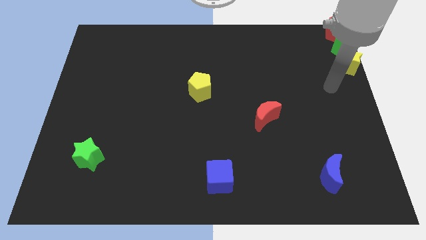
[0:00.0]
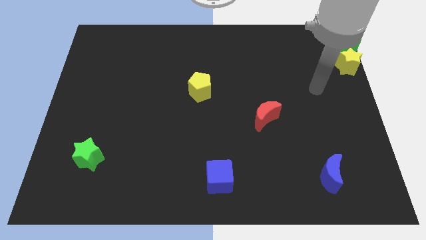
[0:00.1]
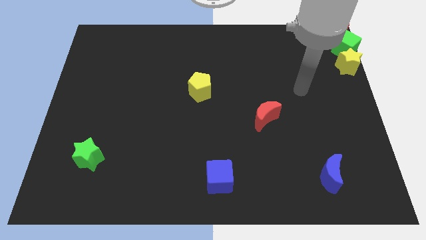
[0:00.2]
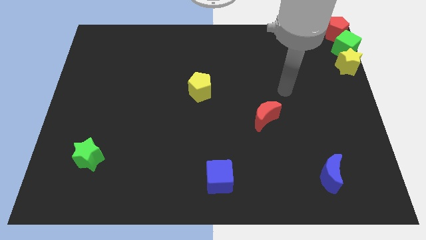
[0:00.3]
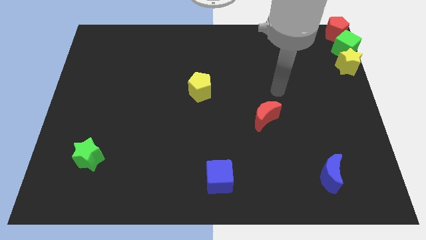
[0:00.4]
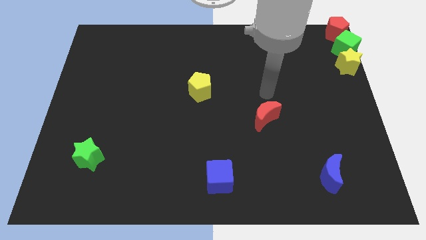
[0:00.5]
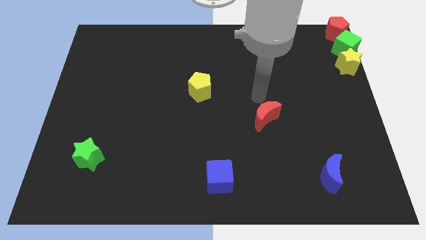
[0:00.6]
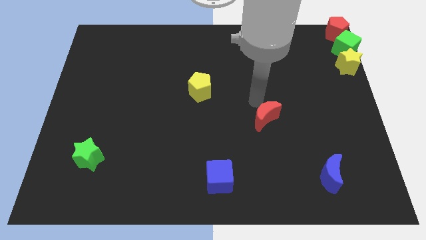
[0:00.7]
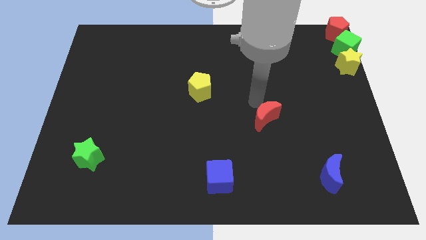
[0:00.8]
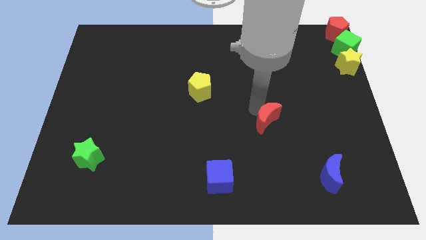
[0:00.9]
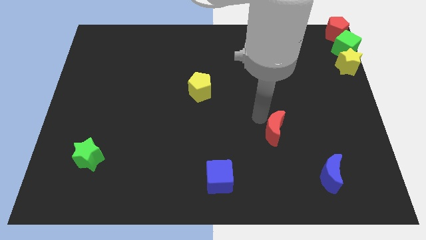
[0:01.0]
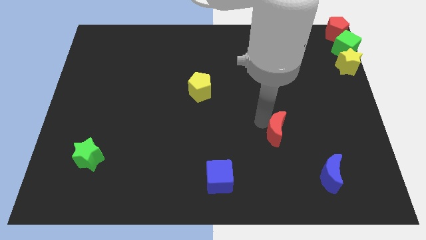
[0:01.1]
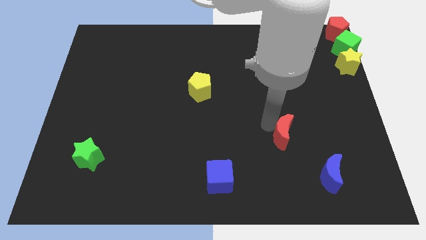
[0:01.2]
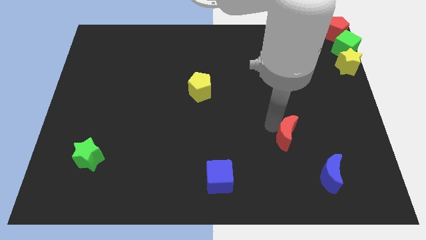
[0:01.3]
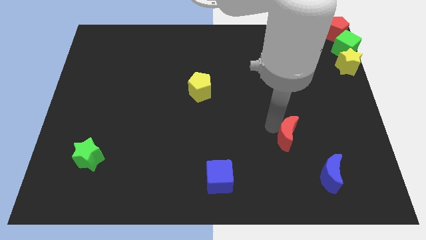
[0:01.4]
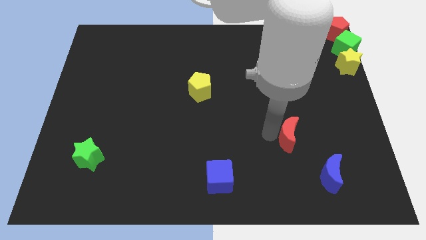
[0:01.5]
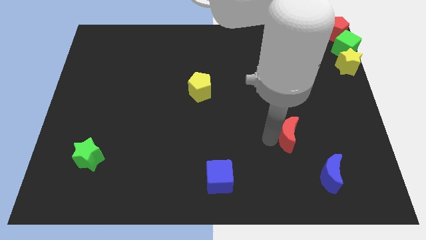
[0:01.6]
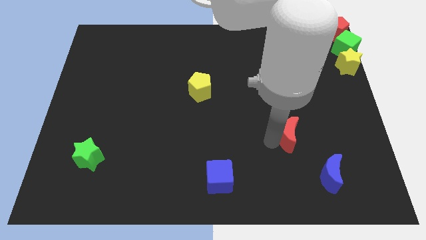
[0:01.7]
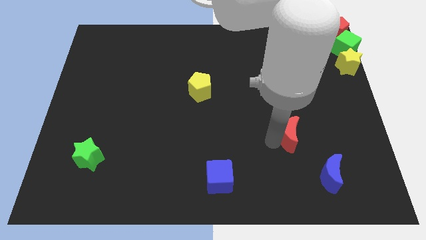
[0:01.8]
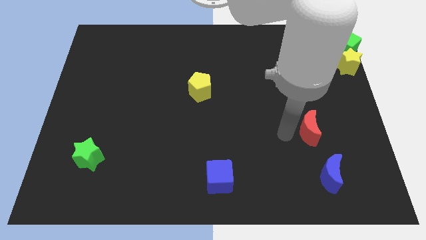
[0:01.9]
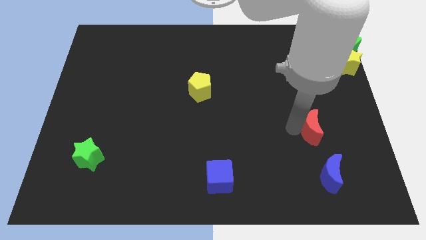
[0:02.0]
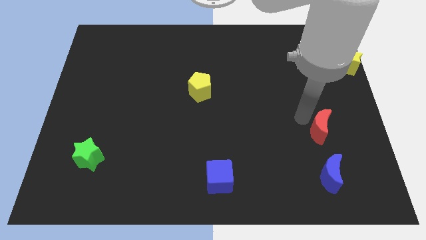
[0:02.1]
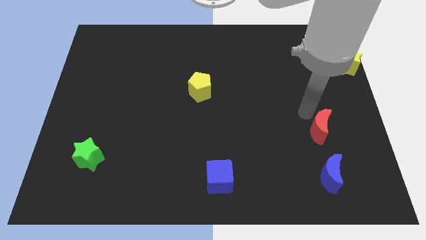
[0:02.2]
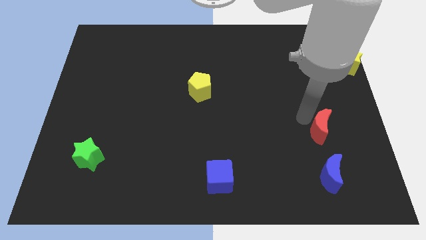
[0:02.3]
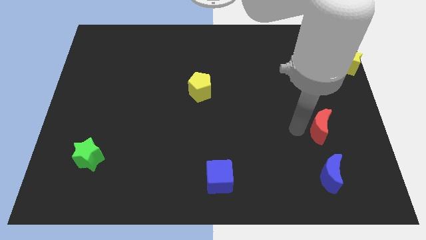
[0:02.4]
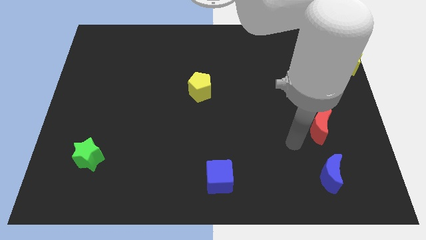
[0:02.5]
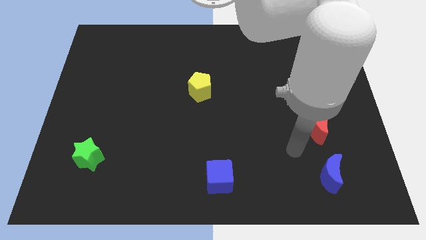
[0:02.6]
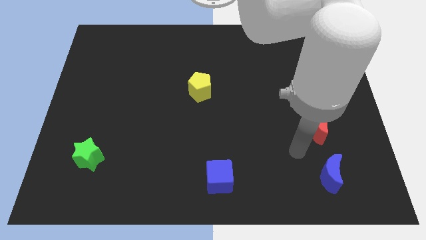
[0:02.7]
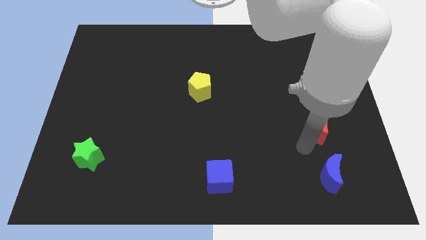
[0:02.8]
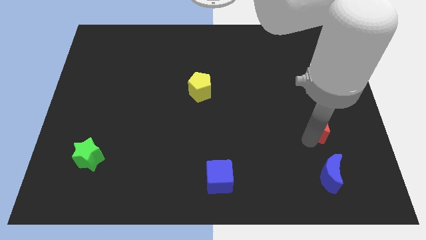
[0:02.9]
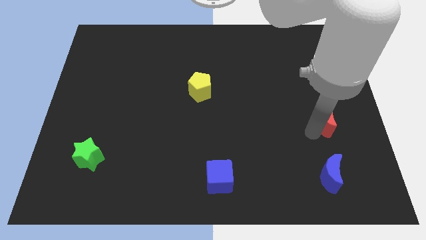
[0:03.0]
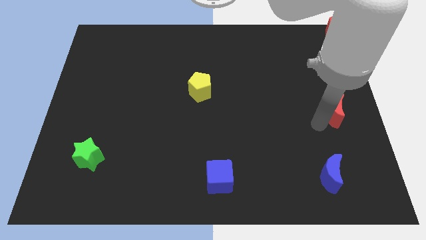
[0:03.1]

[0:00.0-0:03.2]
push red crescent above blue crescent

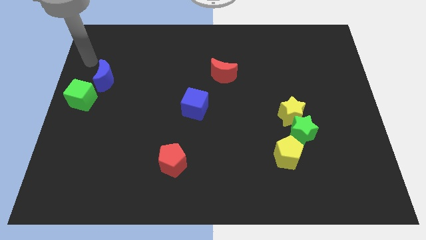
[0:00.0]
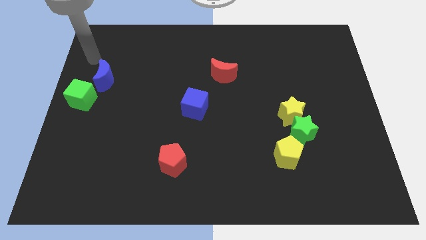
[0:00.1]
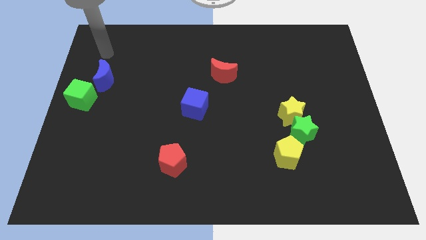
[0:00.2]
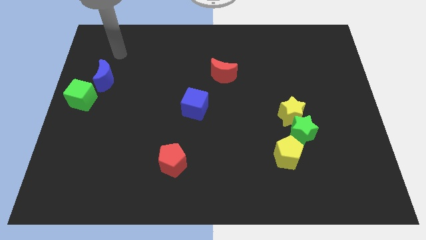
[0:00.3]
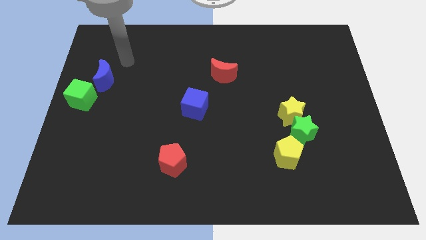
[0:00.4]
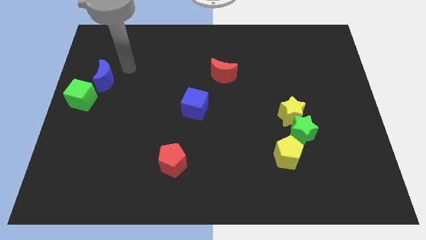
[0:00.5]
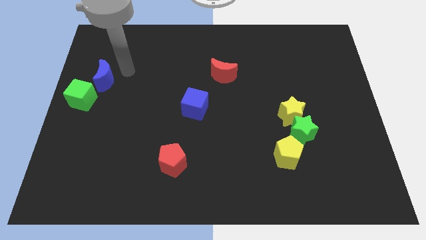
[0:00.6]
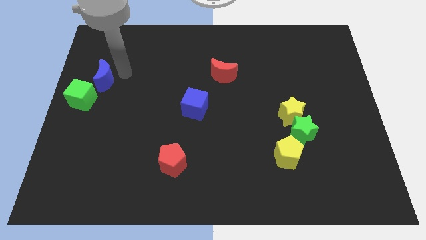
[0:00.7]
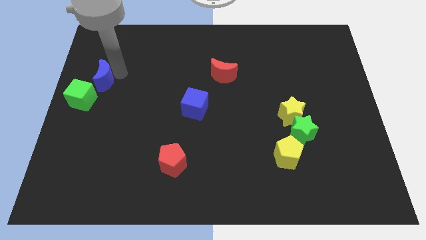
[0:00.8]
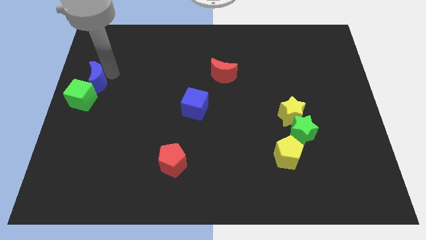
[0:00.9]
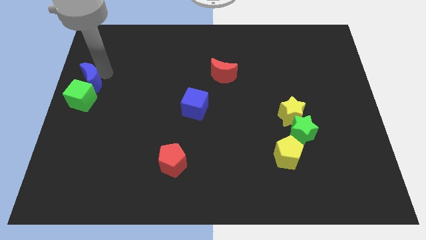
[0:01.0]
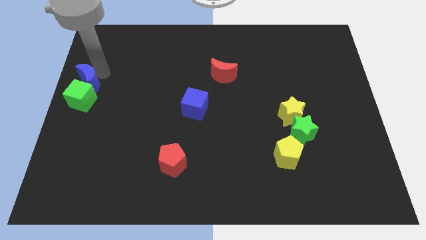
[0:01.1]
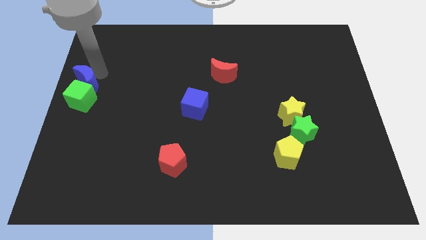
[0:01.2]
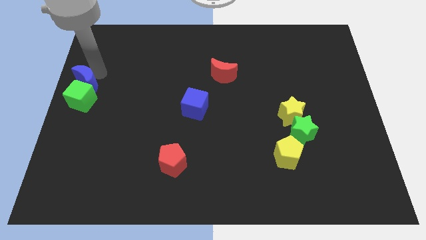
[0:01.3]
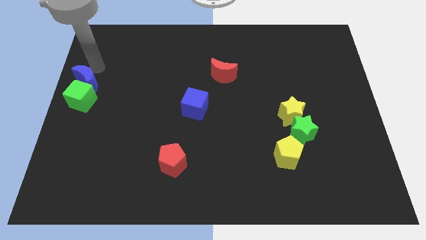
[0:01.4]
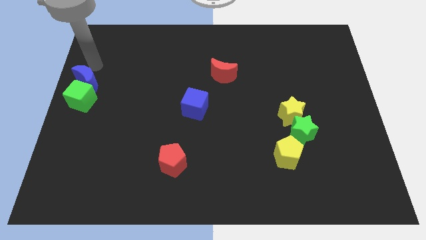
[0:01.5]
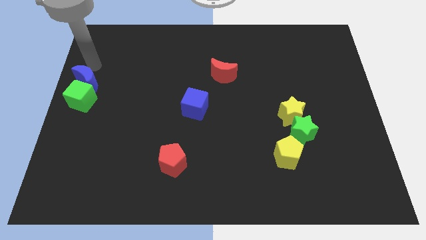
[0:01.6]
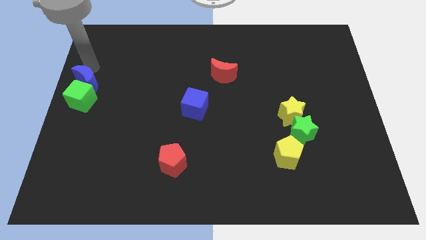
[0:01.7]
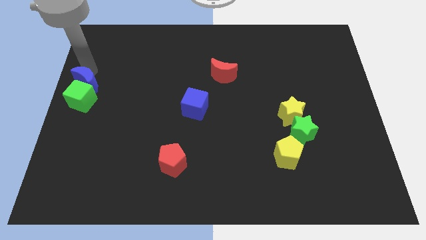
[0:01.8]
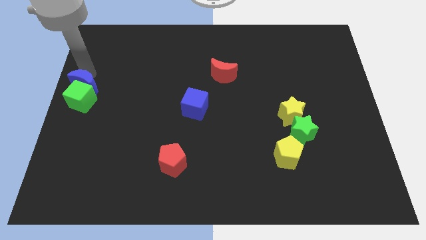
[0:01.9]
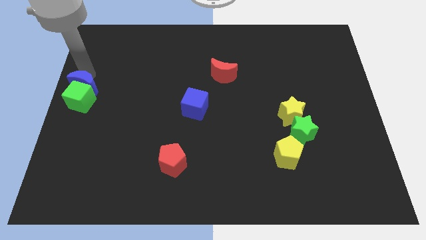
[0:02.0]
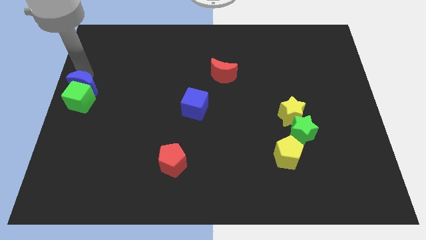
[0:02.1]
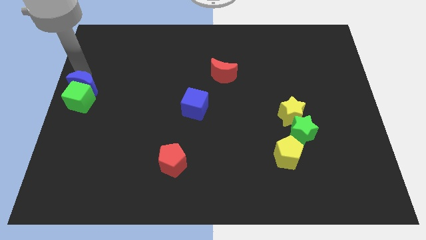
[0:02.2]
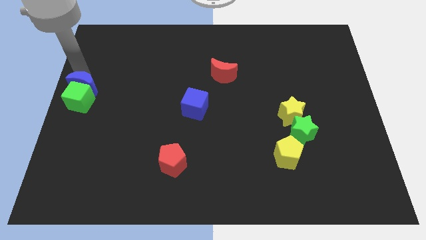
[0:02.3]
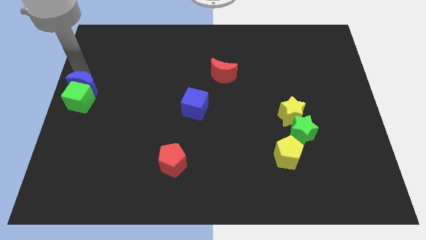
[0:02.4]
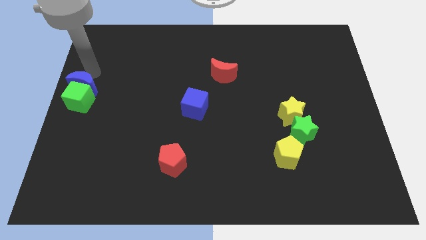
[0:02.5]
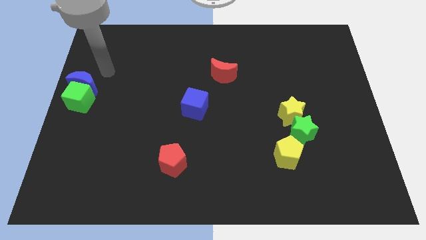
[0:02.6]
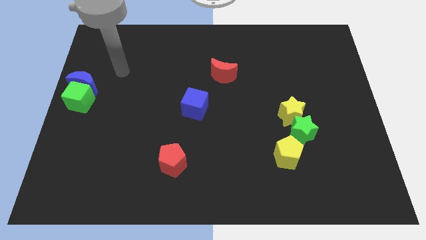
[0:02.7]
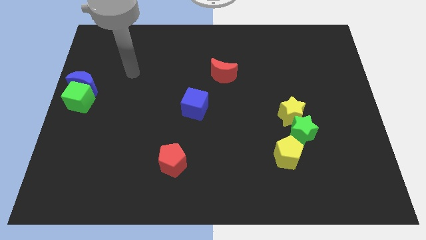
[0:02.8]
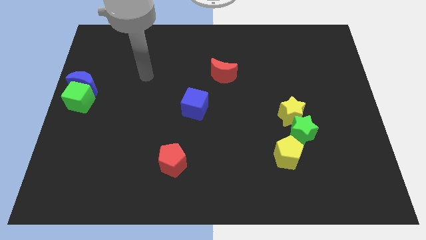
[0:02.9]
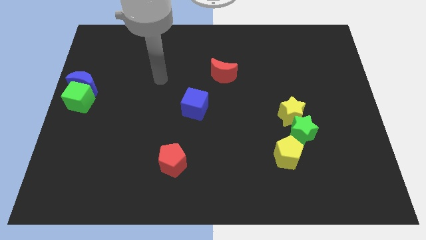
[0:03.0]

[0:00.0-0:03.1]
push blue moon close to green cube

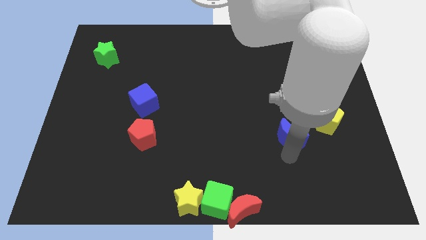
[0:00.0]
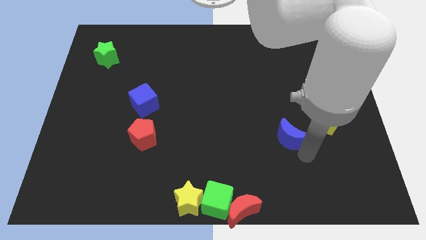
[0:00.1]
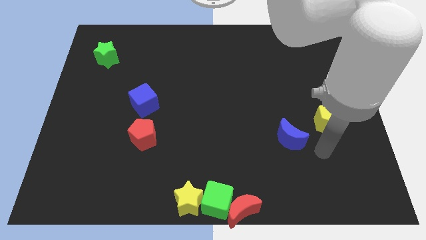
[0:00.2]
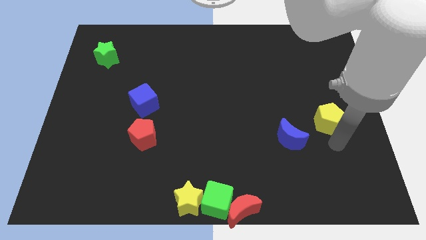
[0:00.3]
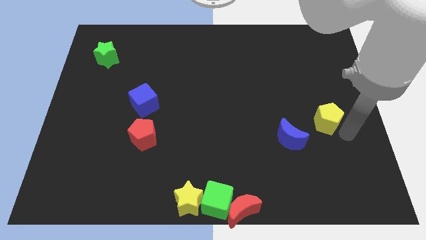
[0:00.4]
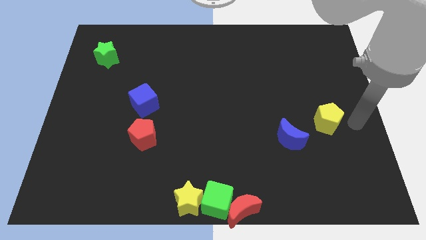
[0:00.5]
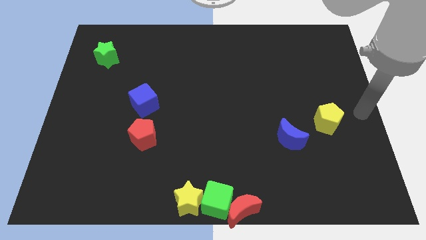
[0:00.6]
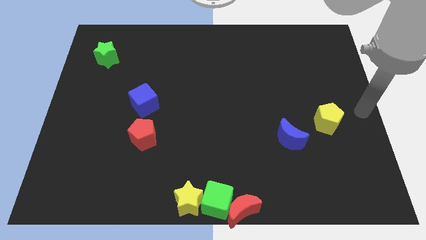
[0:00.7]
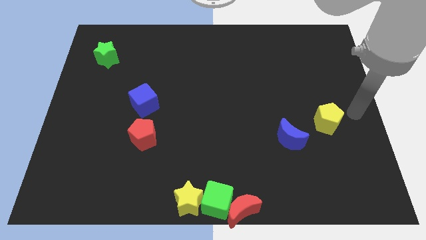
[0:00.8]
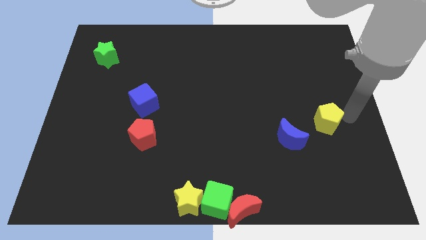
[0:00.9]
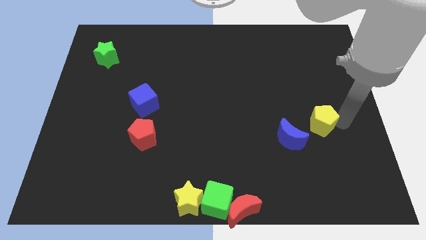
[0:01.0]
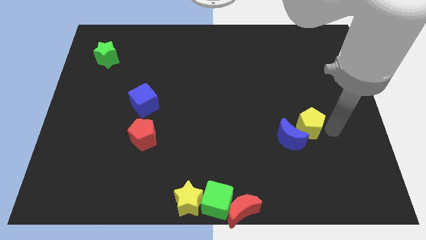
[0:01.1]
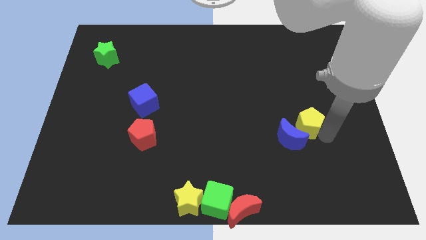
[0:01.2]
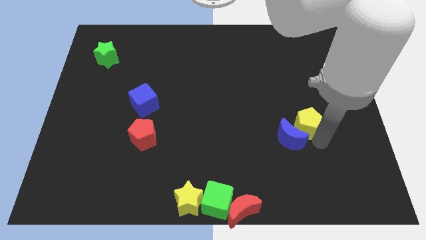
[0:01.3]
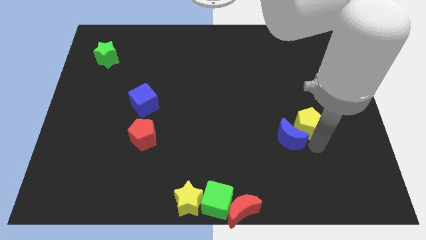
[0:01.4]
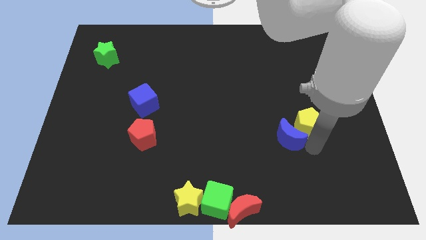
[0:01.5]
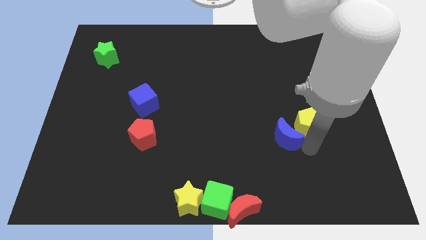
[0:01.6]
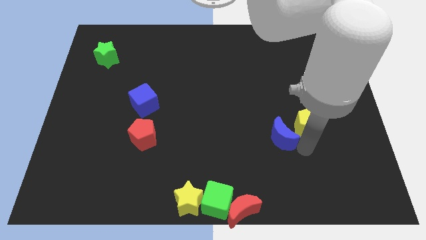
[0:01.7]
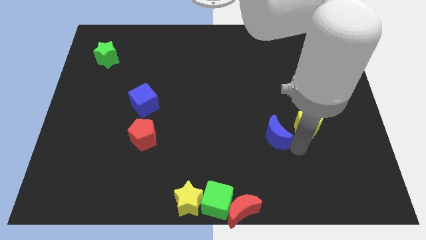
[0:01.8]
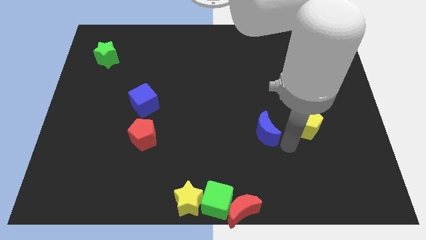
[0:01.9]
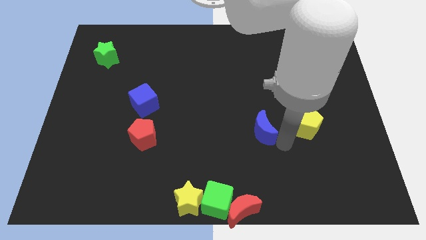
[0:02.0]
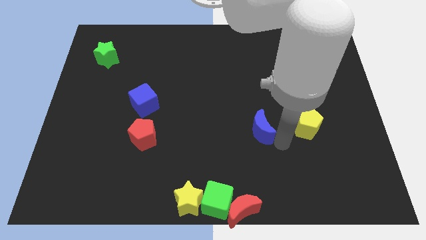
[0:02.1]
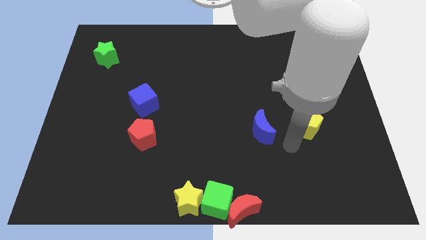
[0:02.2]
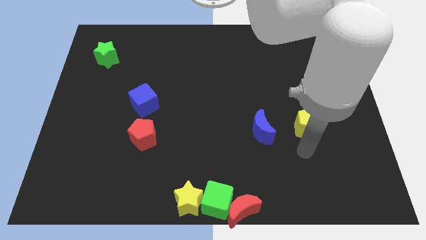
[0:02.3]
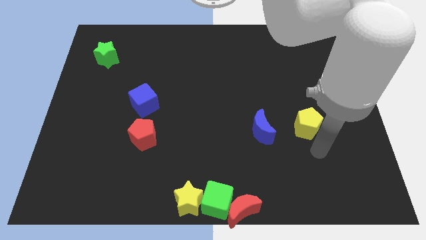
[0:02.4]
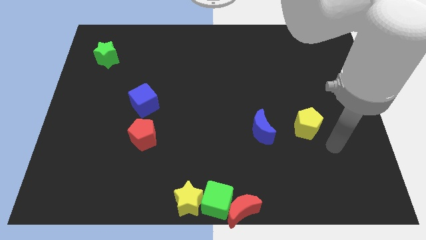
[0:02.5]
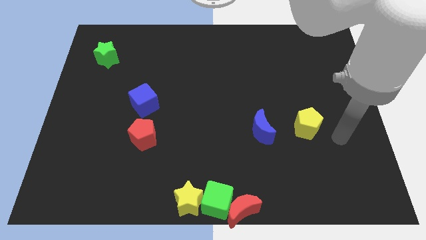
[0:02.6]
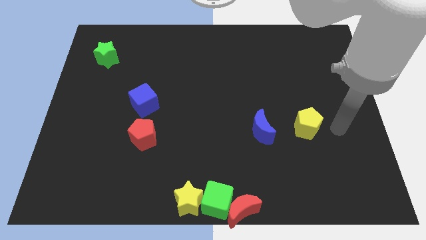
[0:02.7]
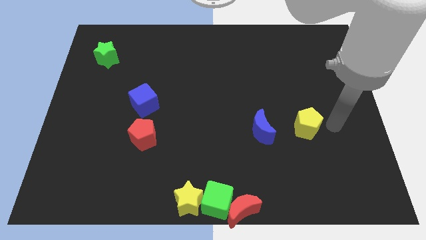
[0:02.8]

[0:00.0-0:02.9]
move yellow pentagon into blue moon
